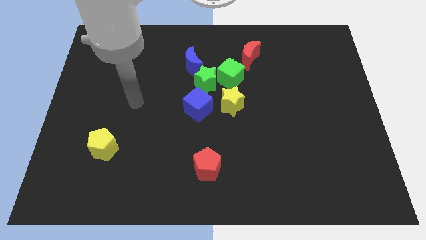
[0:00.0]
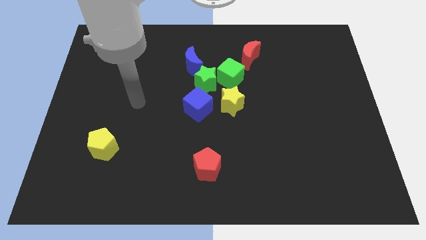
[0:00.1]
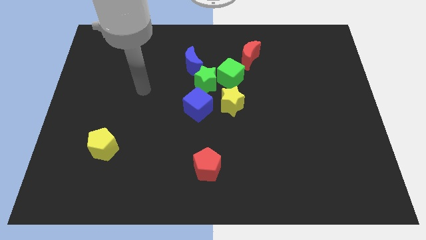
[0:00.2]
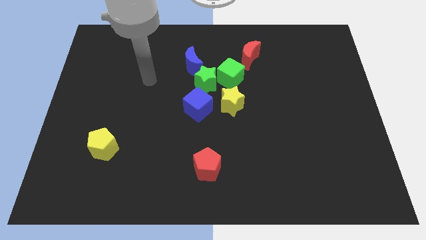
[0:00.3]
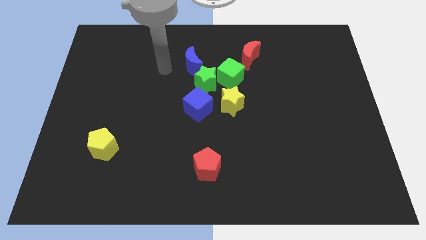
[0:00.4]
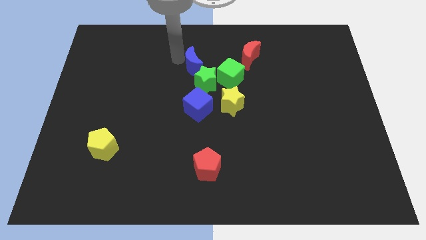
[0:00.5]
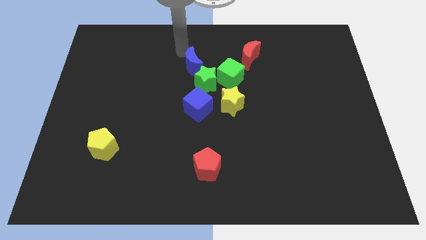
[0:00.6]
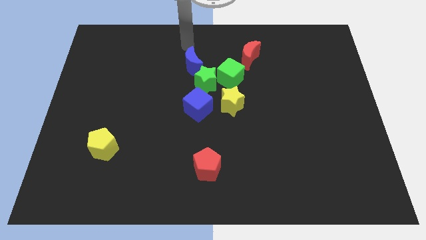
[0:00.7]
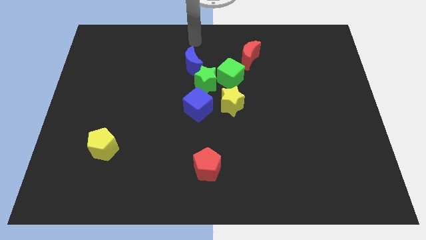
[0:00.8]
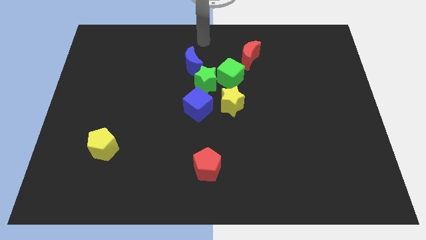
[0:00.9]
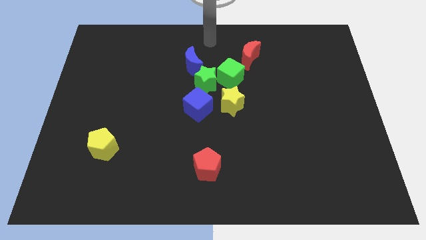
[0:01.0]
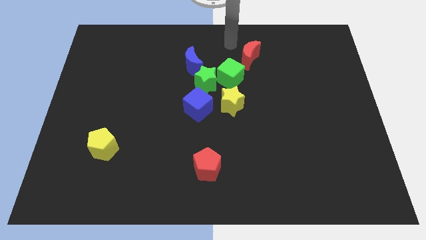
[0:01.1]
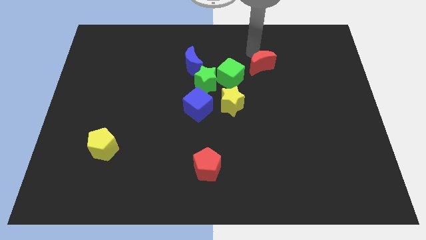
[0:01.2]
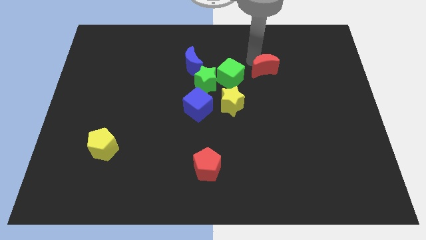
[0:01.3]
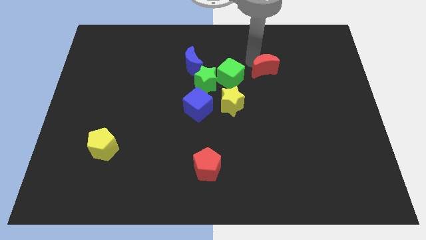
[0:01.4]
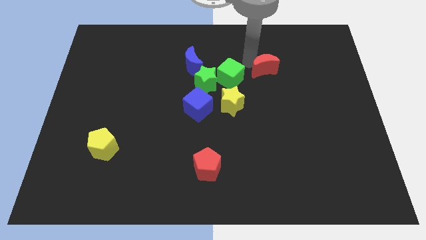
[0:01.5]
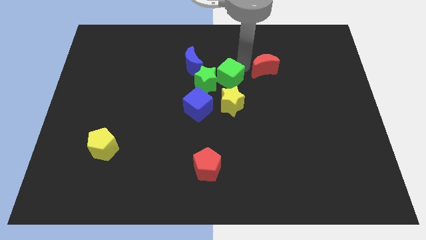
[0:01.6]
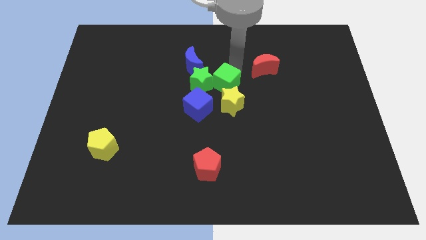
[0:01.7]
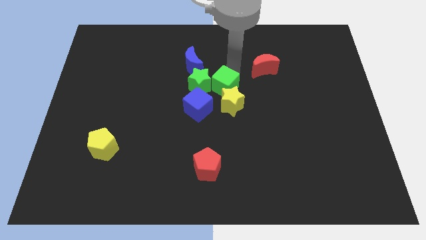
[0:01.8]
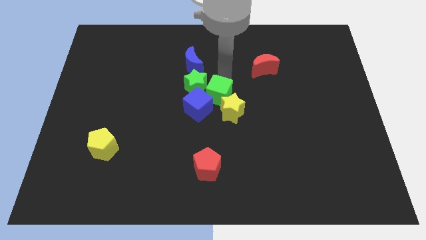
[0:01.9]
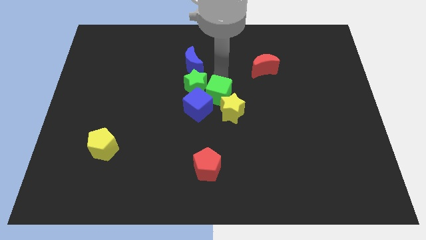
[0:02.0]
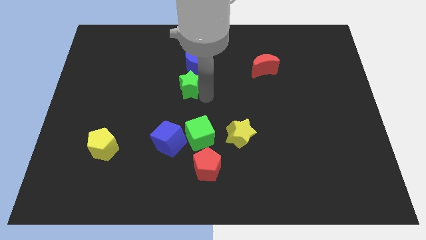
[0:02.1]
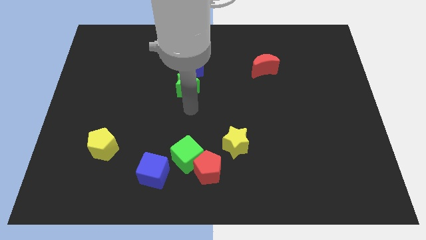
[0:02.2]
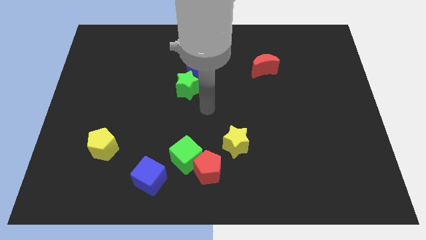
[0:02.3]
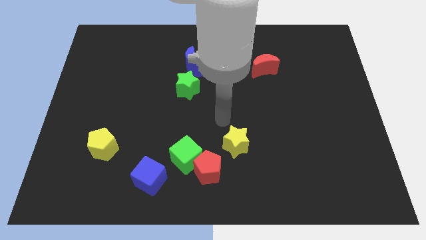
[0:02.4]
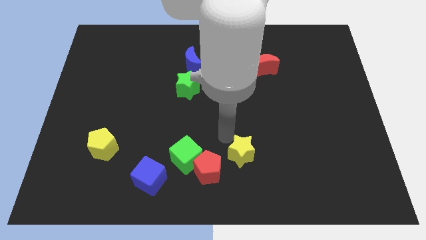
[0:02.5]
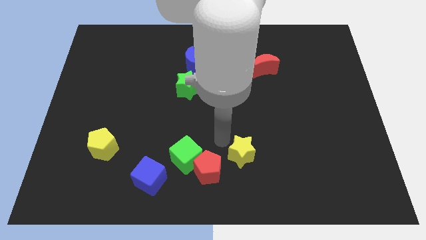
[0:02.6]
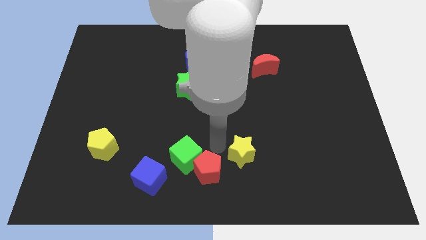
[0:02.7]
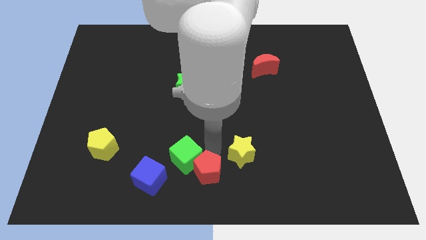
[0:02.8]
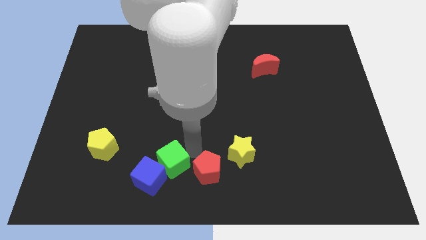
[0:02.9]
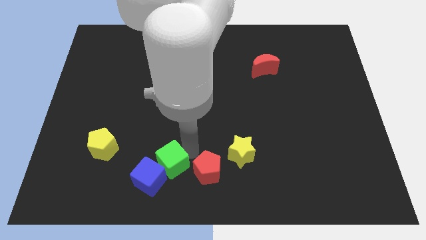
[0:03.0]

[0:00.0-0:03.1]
move the green cube close to the blue cube

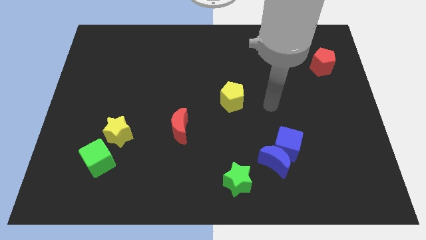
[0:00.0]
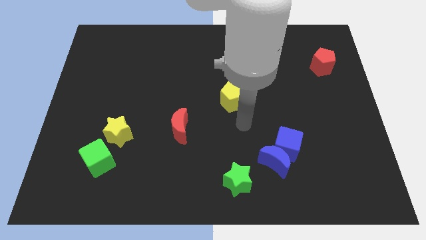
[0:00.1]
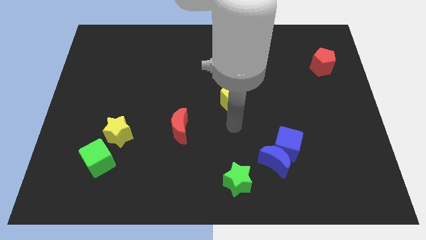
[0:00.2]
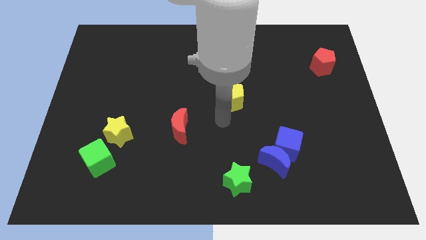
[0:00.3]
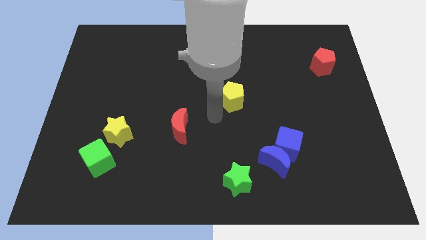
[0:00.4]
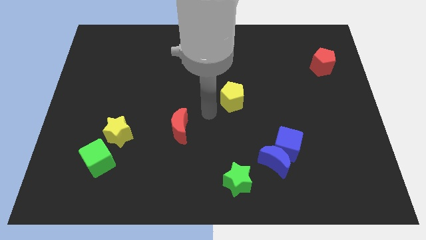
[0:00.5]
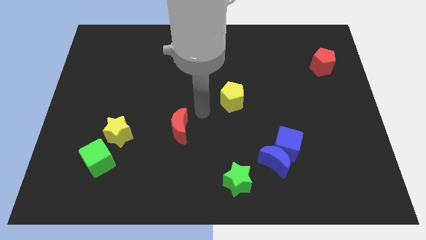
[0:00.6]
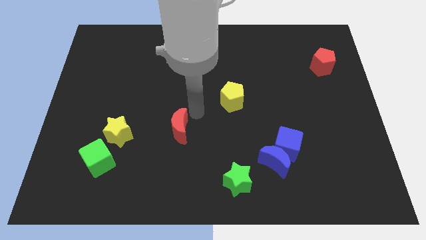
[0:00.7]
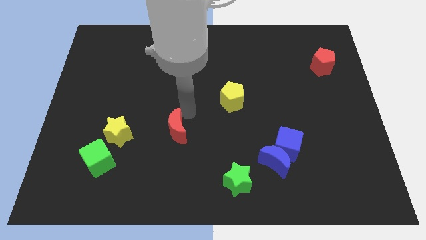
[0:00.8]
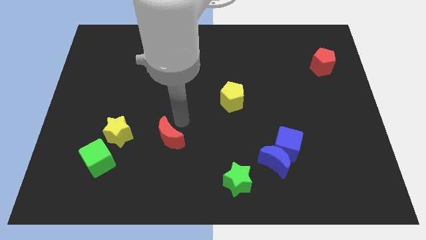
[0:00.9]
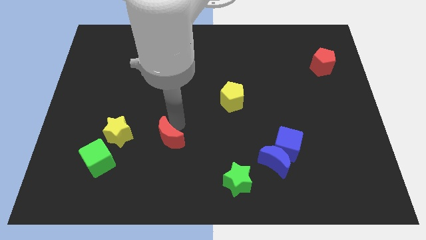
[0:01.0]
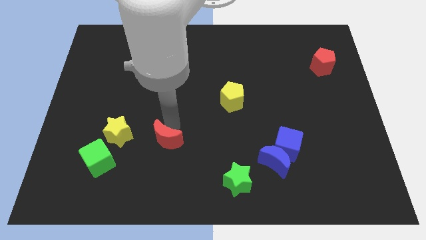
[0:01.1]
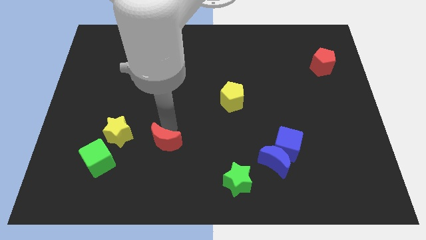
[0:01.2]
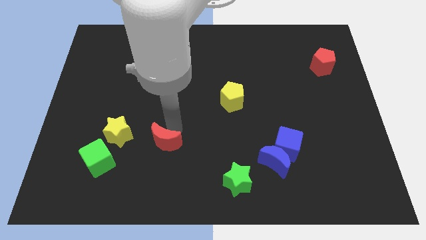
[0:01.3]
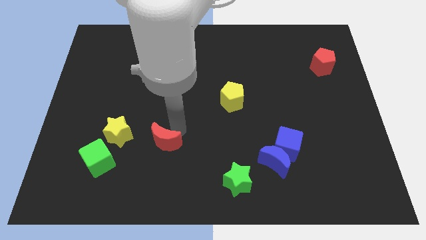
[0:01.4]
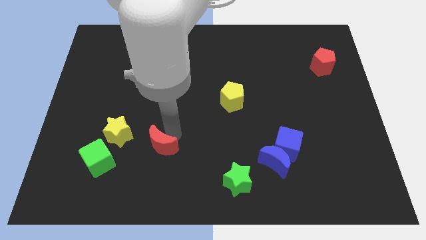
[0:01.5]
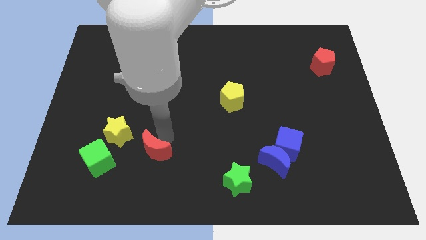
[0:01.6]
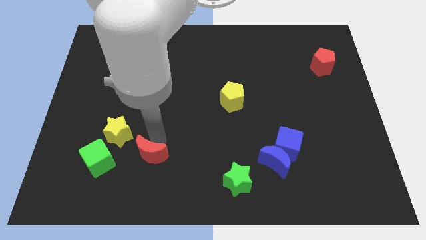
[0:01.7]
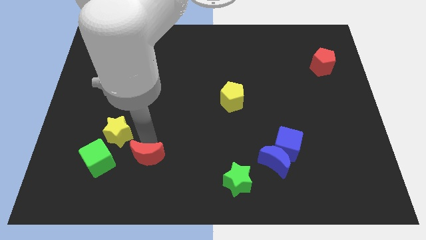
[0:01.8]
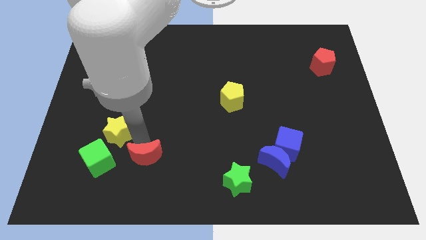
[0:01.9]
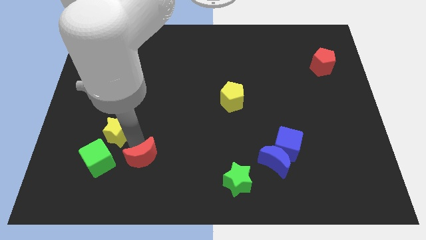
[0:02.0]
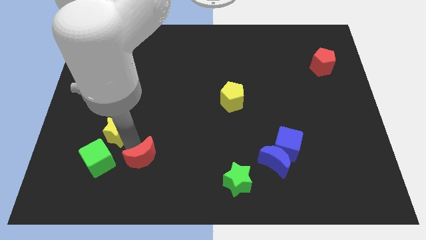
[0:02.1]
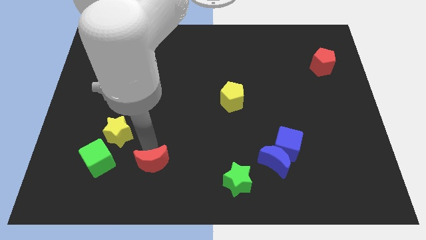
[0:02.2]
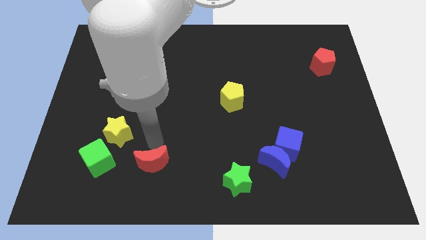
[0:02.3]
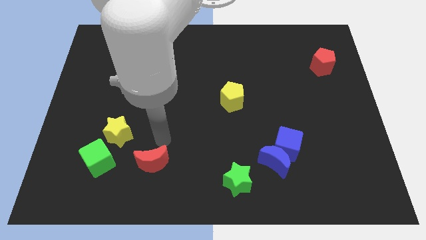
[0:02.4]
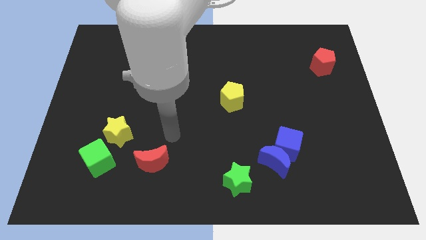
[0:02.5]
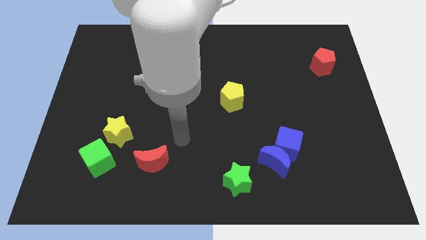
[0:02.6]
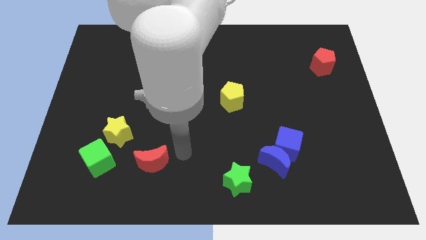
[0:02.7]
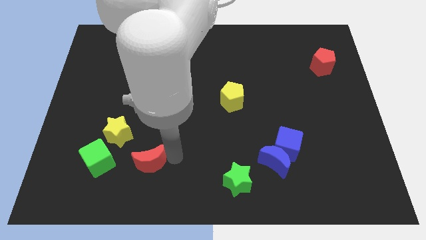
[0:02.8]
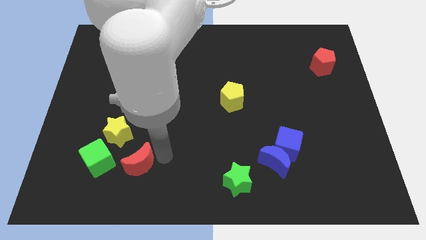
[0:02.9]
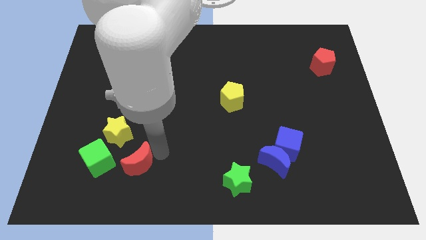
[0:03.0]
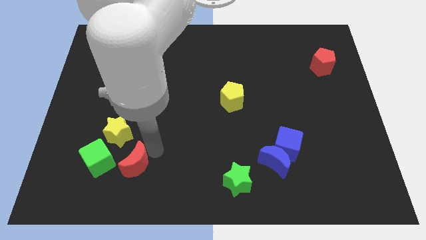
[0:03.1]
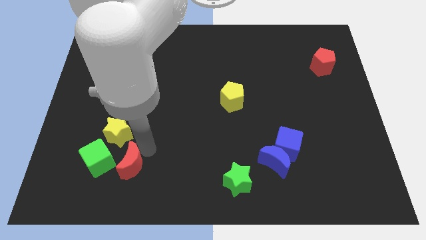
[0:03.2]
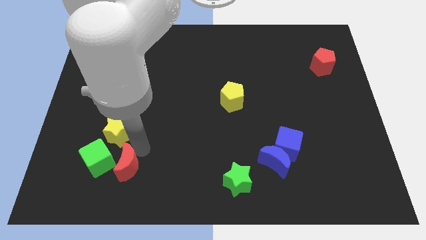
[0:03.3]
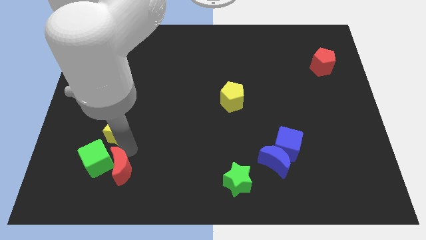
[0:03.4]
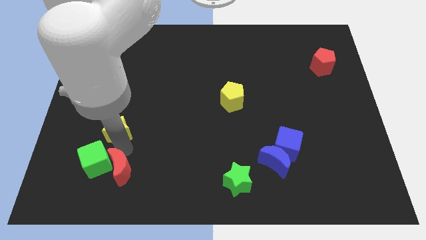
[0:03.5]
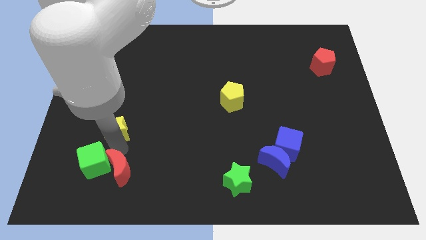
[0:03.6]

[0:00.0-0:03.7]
slide the red moon to the green cube

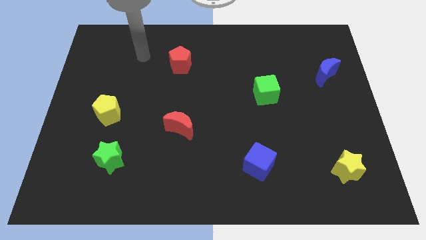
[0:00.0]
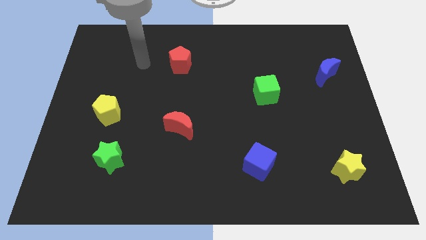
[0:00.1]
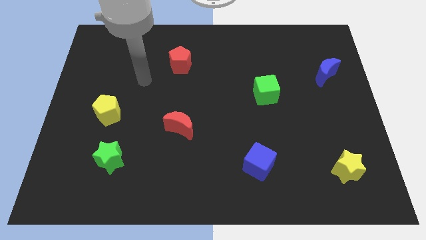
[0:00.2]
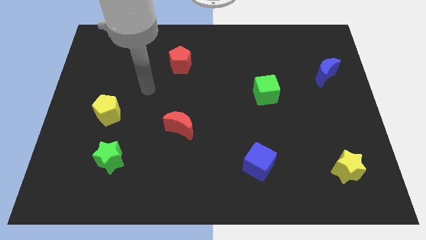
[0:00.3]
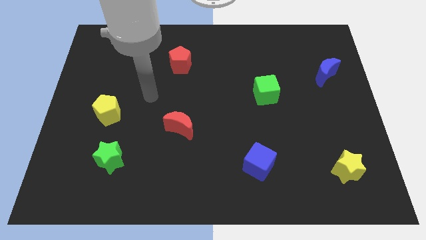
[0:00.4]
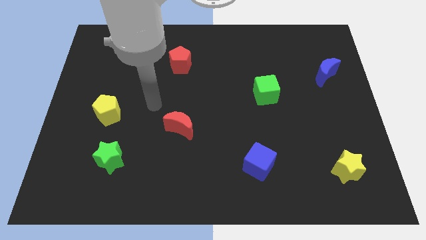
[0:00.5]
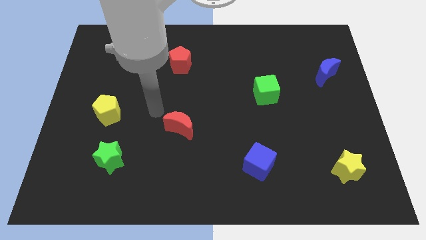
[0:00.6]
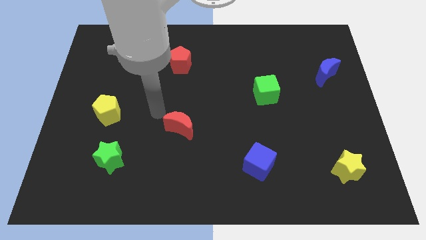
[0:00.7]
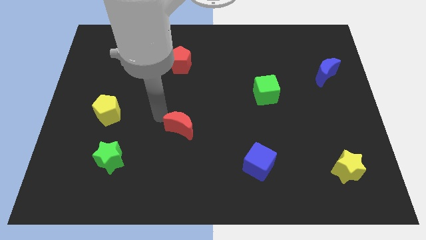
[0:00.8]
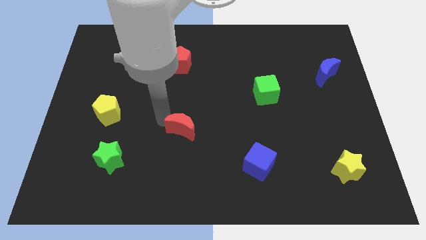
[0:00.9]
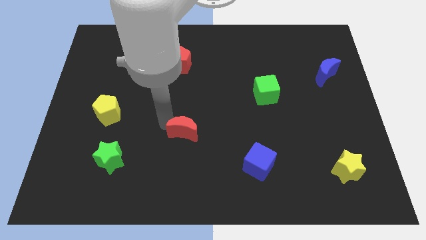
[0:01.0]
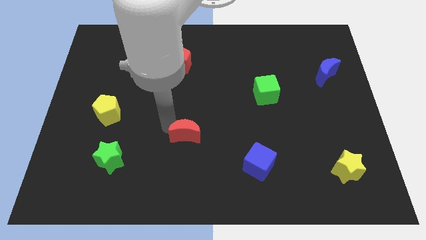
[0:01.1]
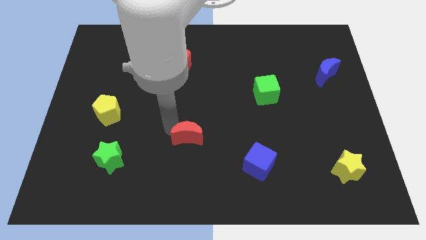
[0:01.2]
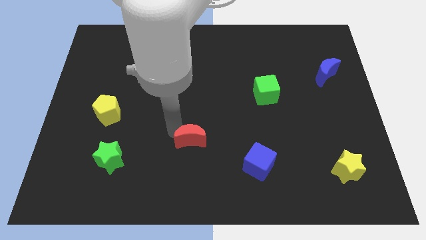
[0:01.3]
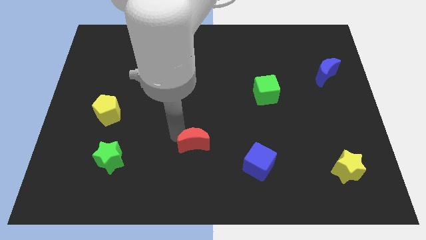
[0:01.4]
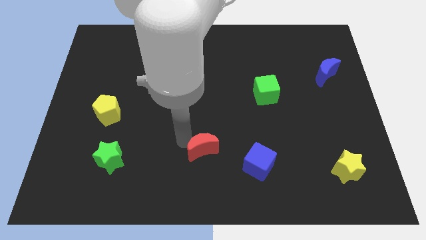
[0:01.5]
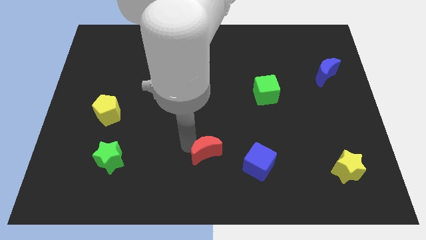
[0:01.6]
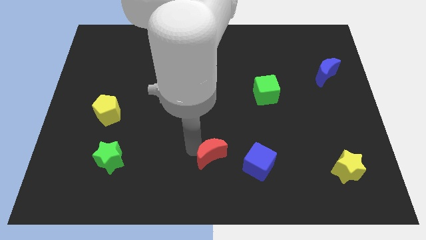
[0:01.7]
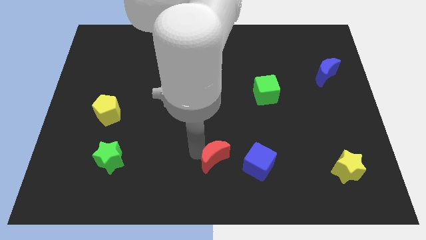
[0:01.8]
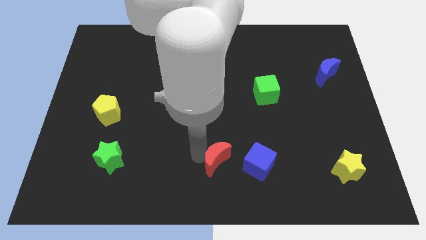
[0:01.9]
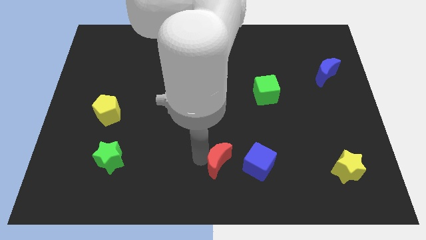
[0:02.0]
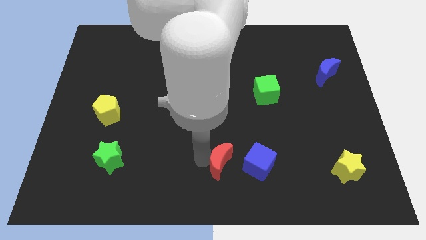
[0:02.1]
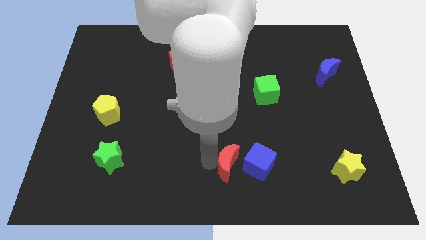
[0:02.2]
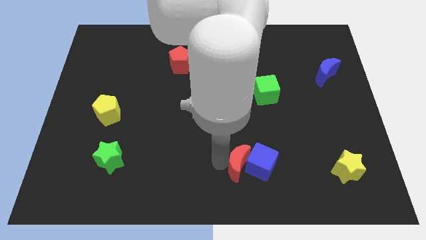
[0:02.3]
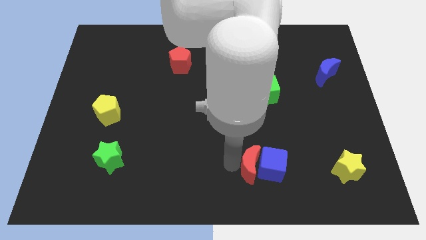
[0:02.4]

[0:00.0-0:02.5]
move the red moon next to the blue cube
